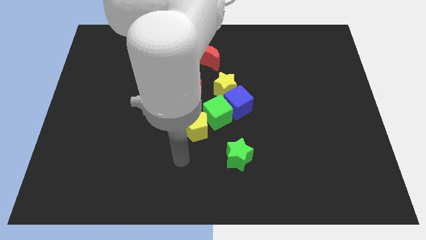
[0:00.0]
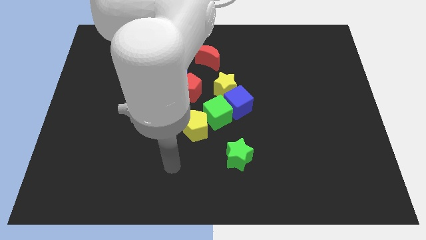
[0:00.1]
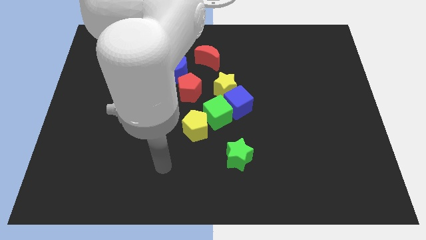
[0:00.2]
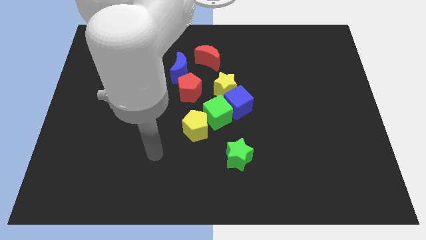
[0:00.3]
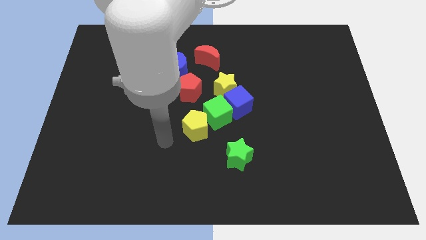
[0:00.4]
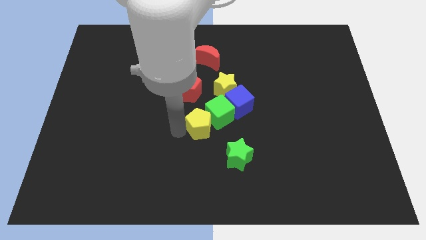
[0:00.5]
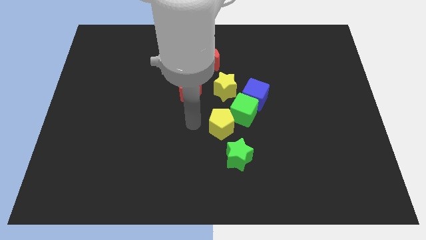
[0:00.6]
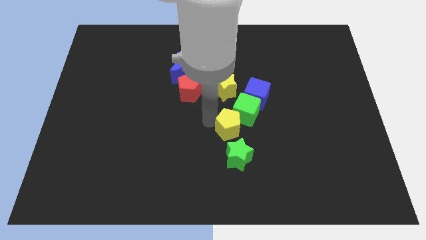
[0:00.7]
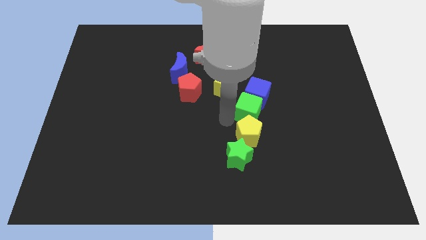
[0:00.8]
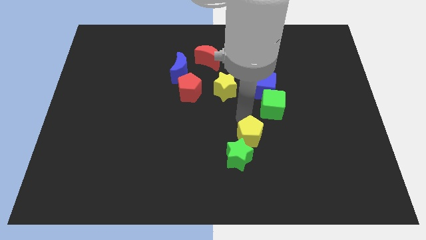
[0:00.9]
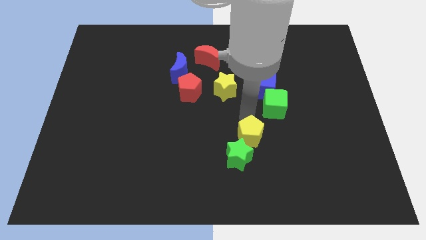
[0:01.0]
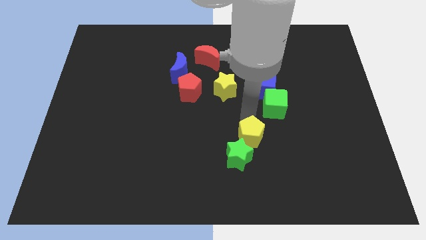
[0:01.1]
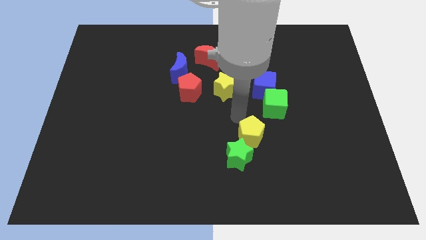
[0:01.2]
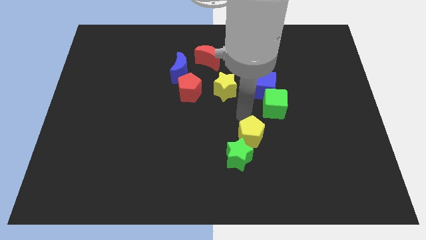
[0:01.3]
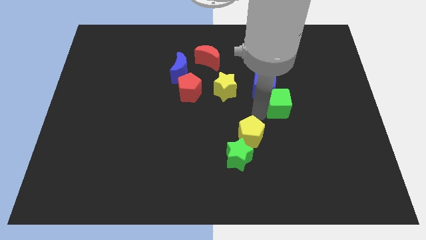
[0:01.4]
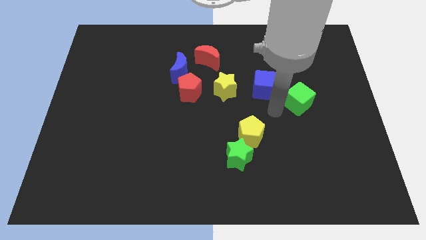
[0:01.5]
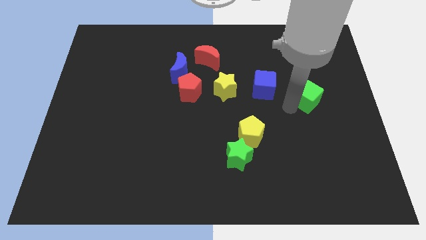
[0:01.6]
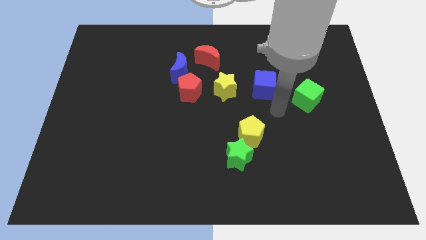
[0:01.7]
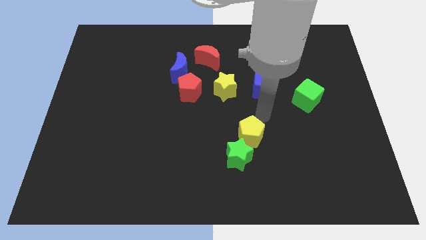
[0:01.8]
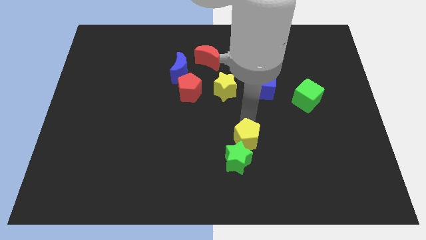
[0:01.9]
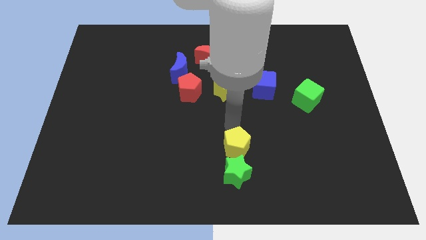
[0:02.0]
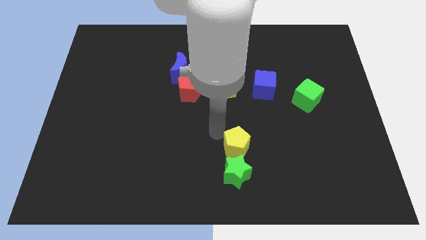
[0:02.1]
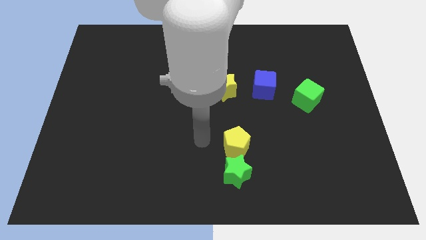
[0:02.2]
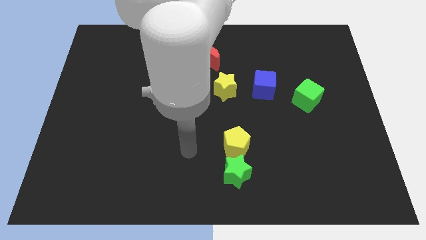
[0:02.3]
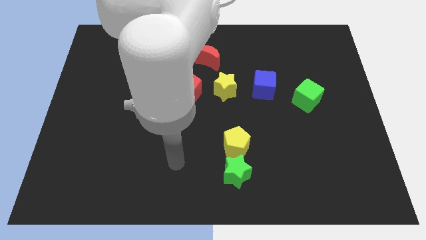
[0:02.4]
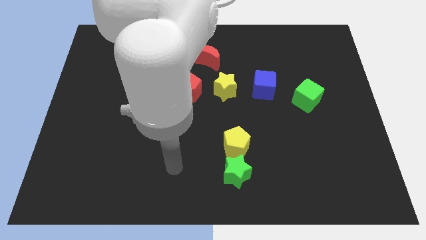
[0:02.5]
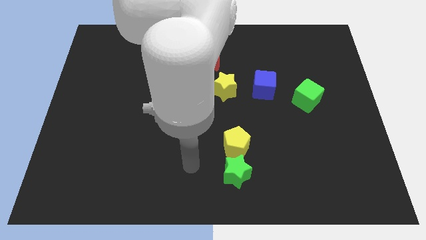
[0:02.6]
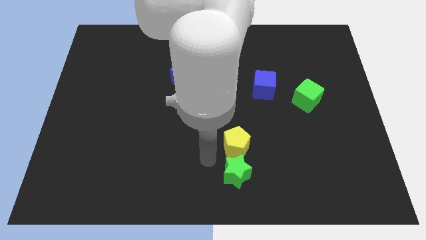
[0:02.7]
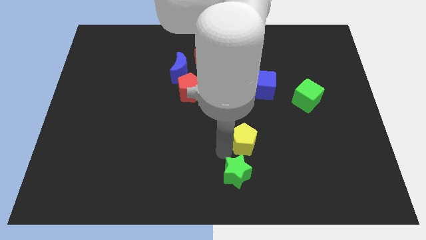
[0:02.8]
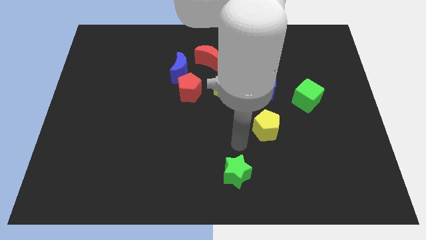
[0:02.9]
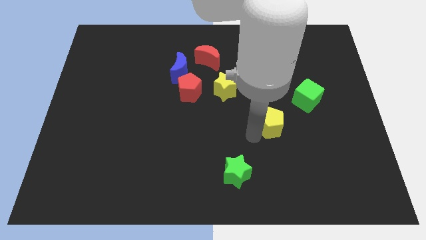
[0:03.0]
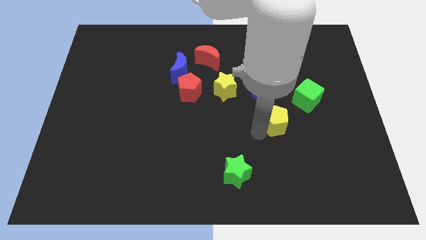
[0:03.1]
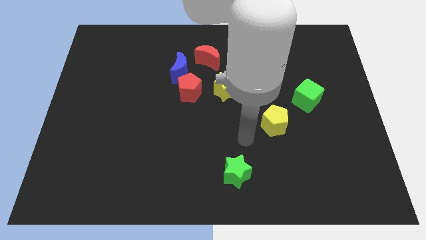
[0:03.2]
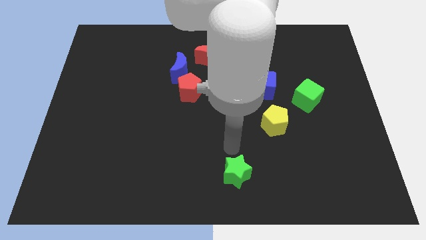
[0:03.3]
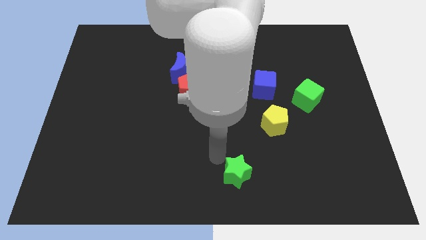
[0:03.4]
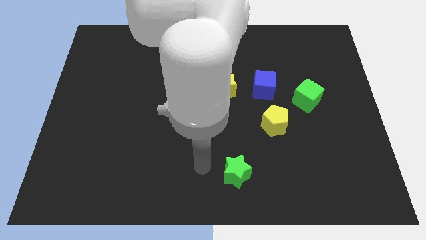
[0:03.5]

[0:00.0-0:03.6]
separate the yellow pentagon and green cube

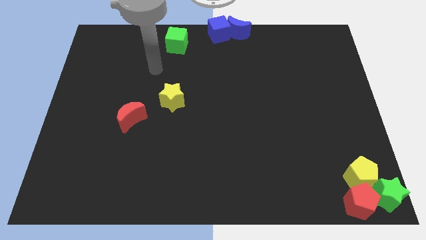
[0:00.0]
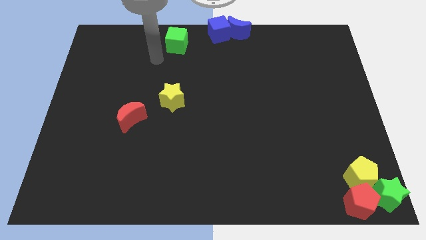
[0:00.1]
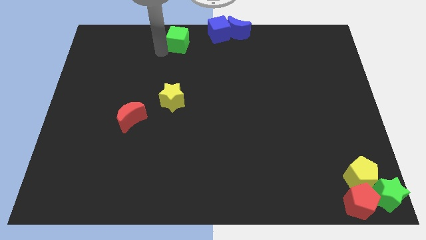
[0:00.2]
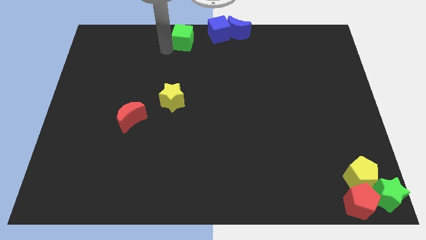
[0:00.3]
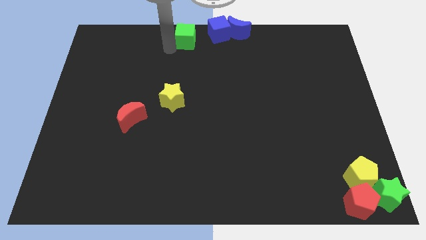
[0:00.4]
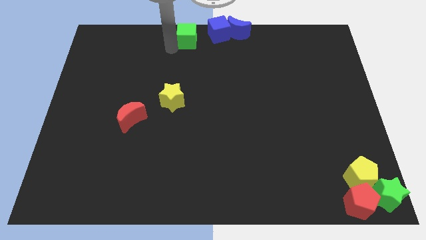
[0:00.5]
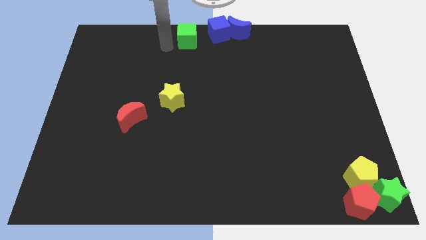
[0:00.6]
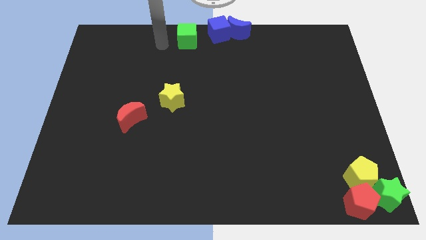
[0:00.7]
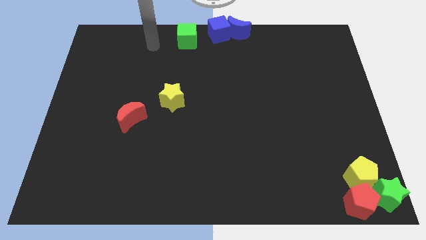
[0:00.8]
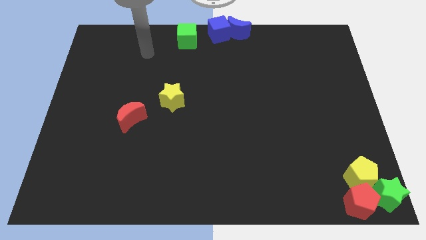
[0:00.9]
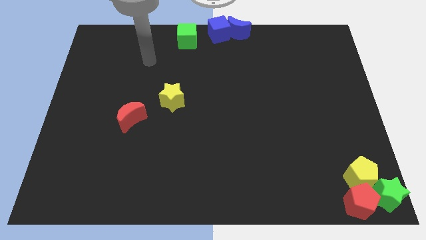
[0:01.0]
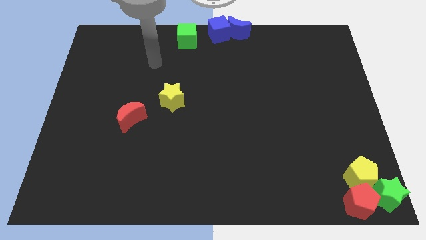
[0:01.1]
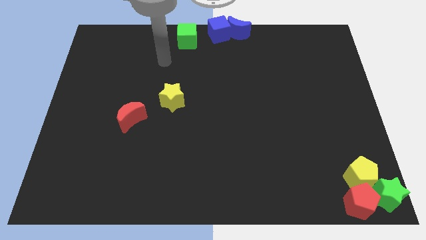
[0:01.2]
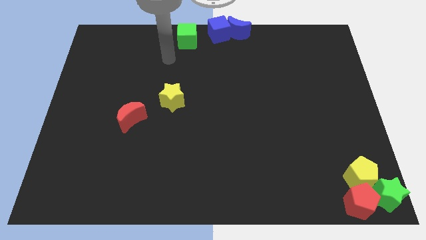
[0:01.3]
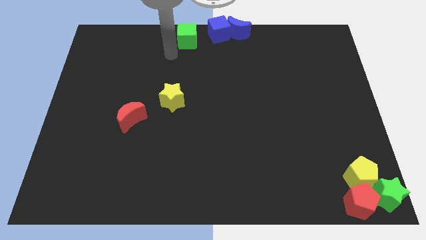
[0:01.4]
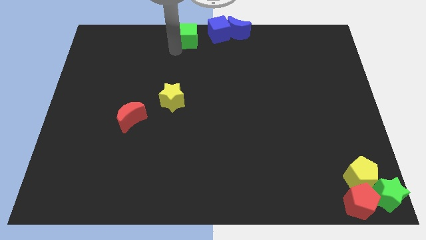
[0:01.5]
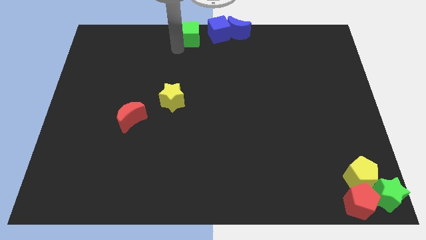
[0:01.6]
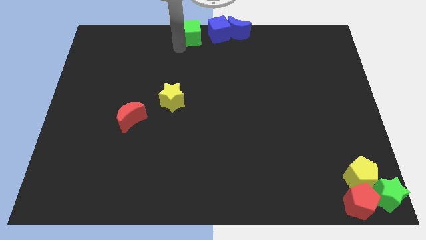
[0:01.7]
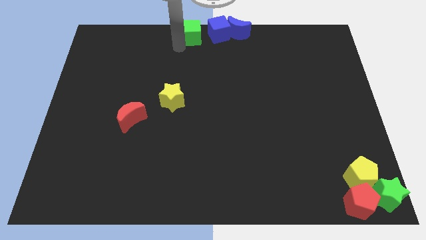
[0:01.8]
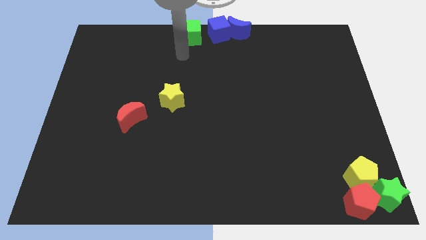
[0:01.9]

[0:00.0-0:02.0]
move the green cube left to the blue cube

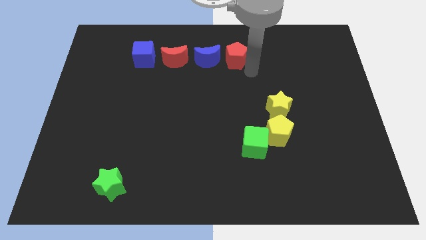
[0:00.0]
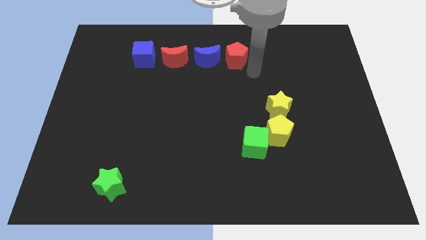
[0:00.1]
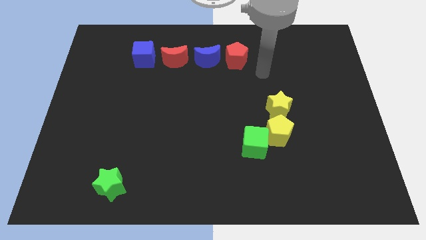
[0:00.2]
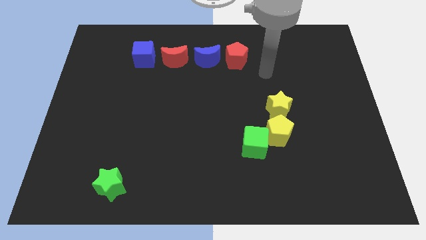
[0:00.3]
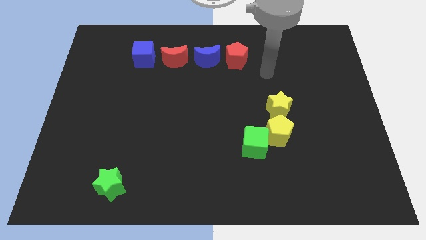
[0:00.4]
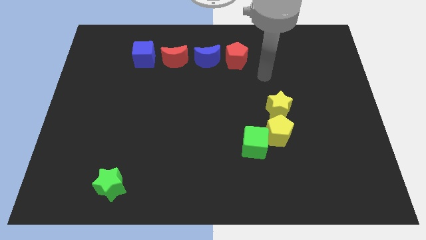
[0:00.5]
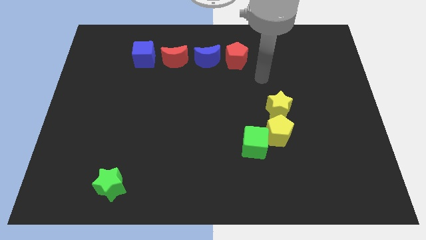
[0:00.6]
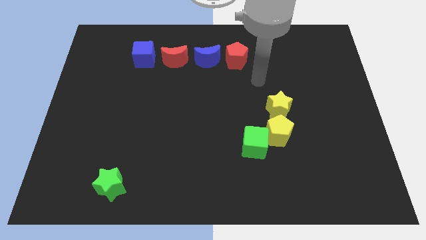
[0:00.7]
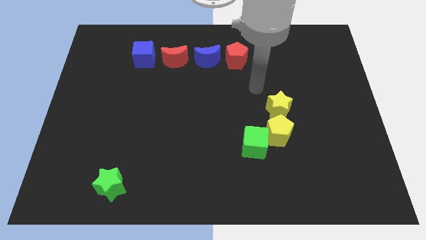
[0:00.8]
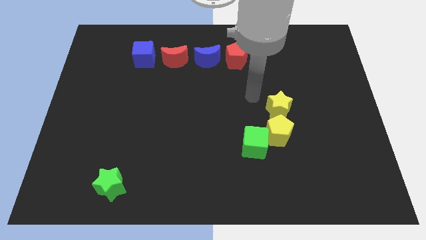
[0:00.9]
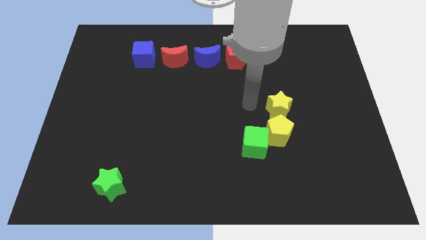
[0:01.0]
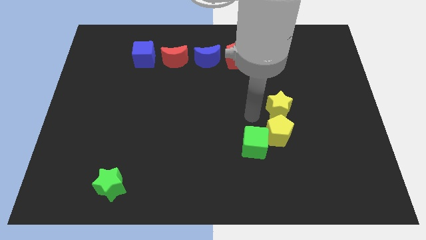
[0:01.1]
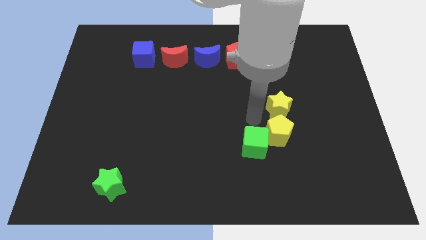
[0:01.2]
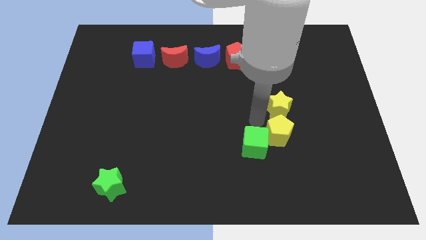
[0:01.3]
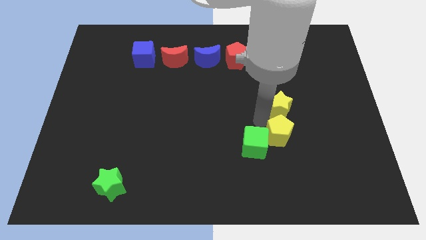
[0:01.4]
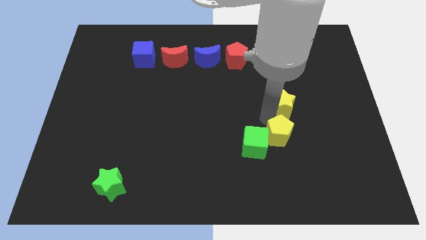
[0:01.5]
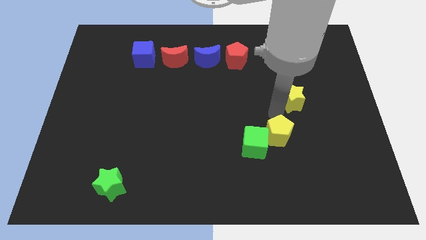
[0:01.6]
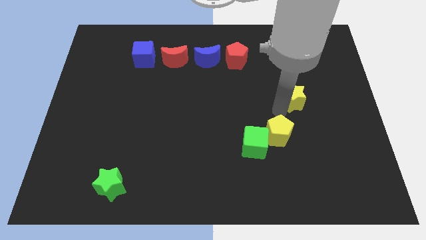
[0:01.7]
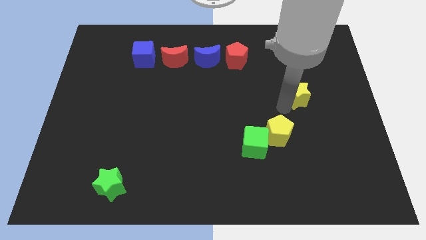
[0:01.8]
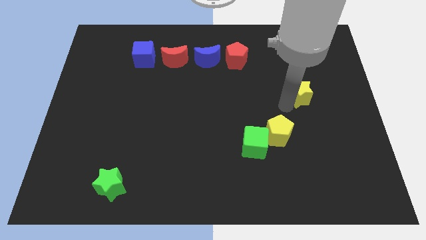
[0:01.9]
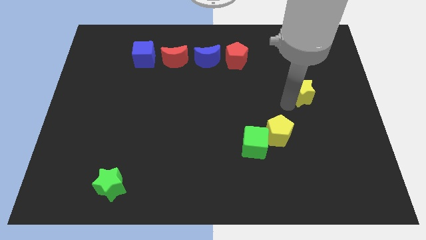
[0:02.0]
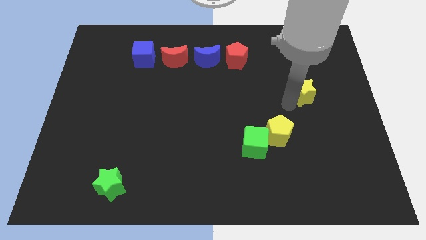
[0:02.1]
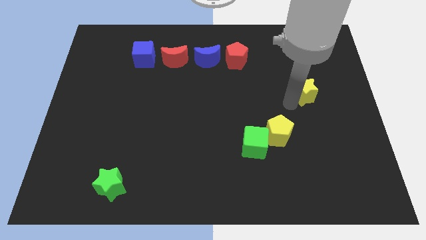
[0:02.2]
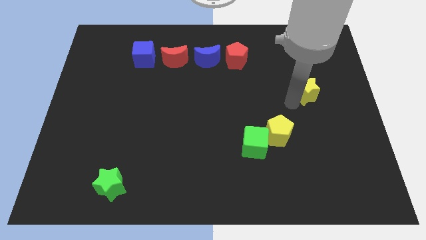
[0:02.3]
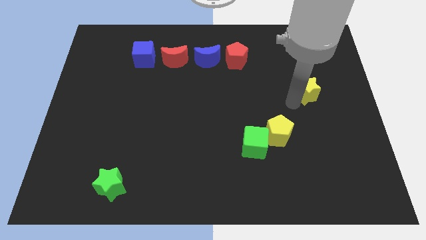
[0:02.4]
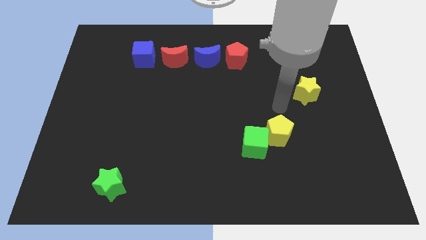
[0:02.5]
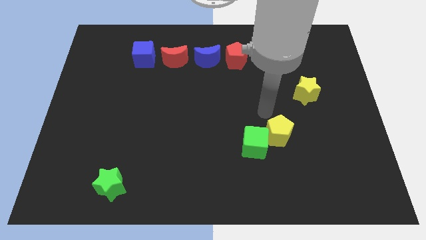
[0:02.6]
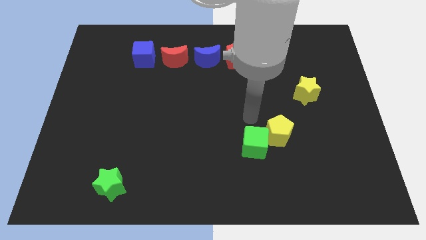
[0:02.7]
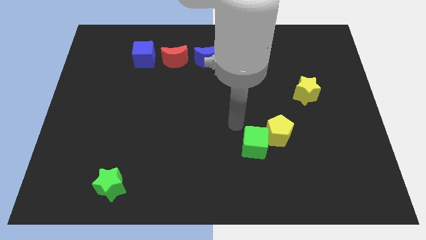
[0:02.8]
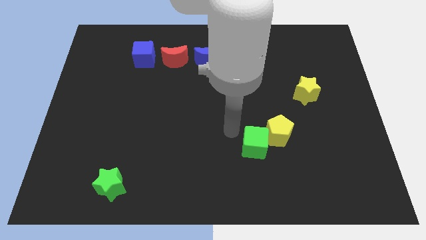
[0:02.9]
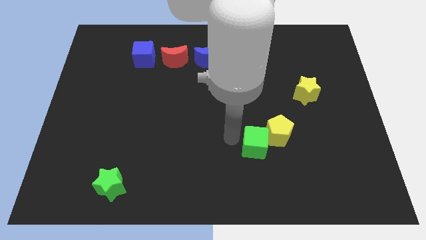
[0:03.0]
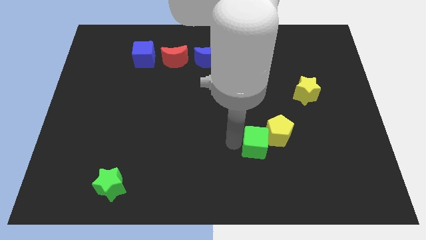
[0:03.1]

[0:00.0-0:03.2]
move the yellow star to the right of the board

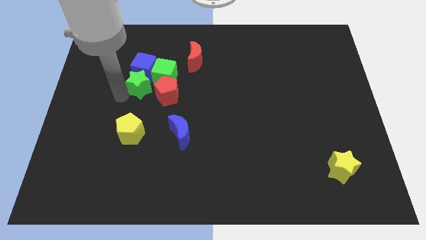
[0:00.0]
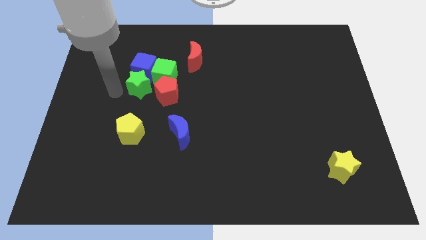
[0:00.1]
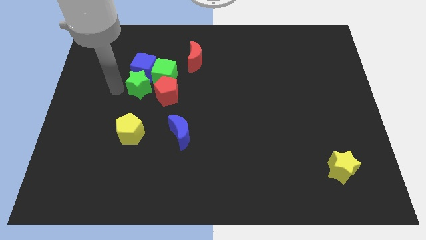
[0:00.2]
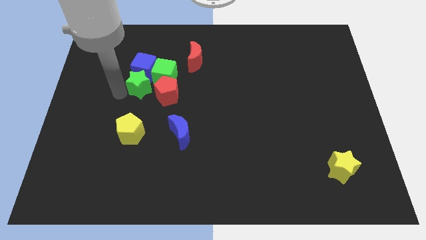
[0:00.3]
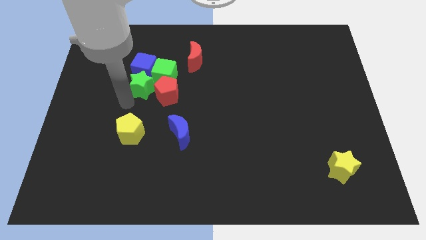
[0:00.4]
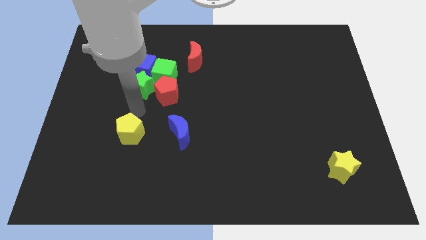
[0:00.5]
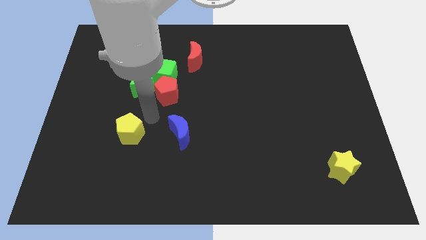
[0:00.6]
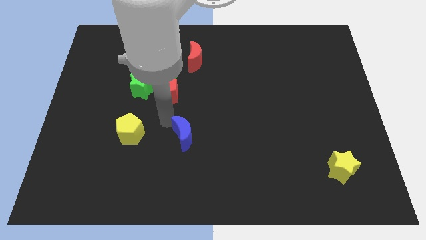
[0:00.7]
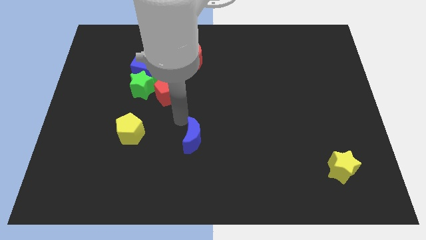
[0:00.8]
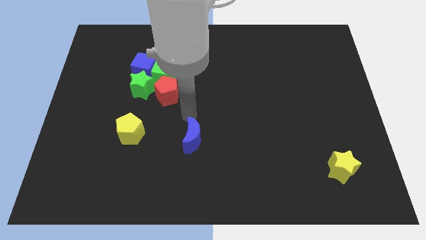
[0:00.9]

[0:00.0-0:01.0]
move your arm towards blue crescent
